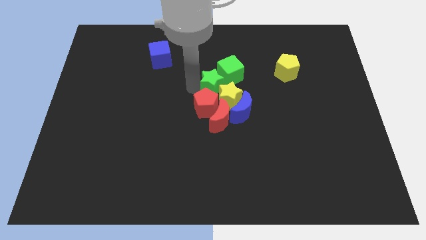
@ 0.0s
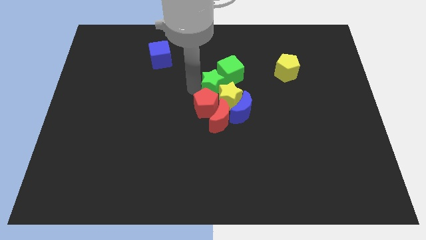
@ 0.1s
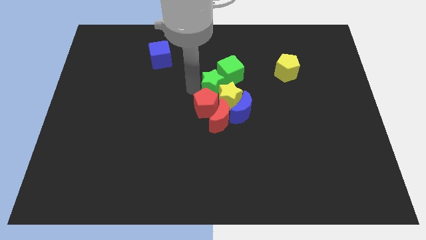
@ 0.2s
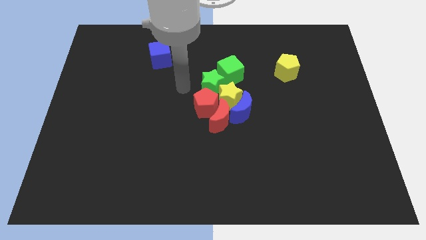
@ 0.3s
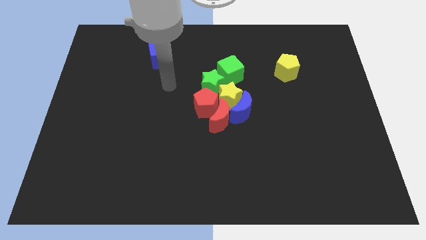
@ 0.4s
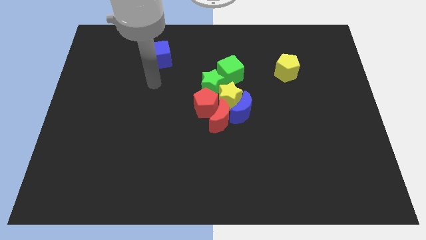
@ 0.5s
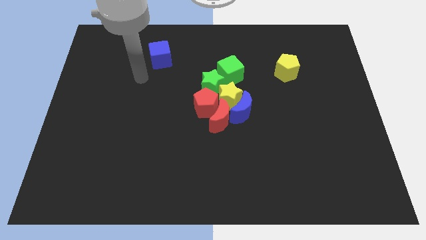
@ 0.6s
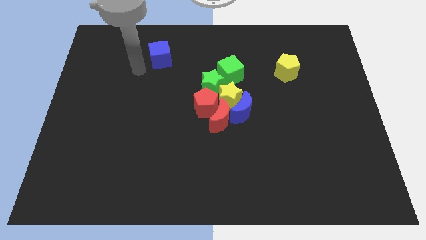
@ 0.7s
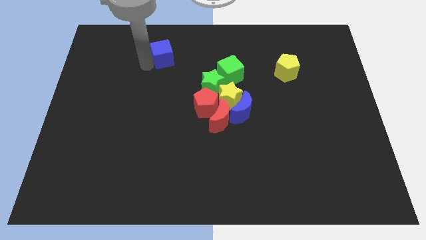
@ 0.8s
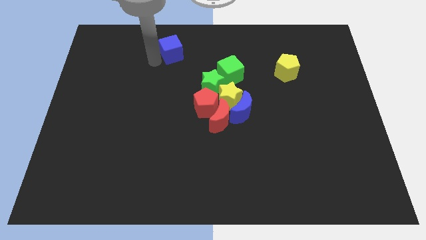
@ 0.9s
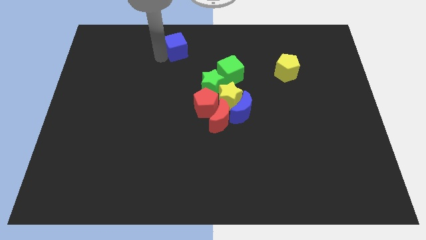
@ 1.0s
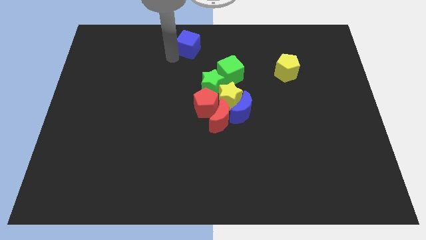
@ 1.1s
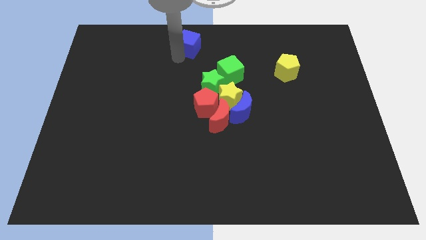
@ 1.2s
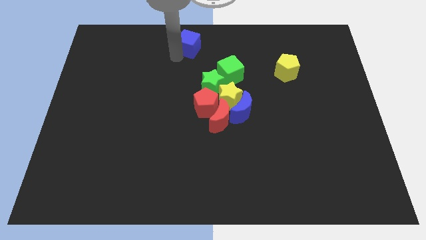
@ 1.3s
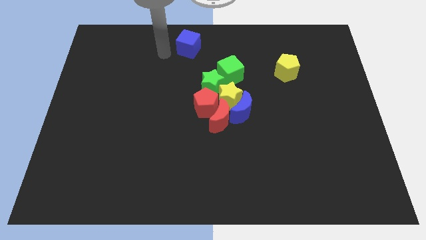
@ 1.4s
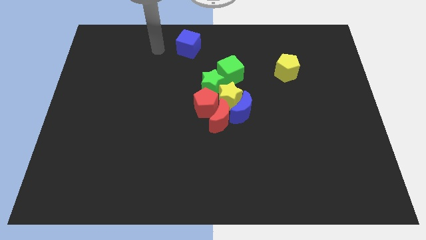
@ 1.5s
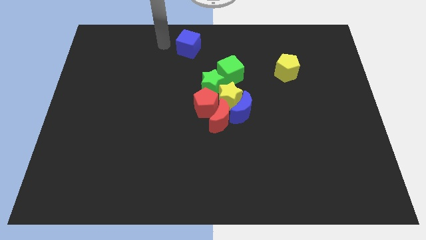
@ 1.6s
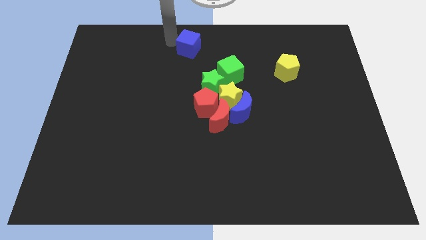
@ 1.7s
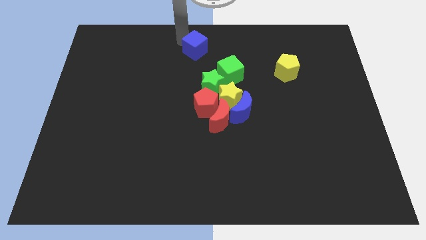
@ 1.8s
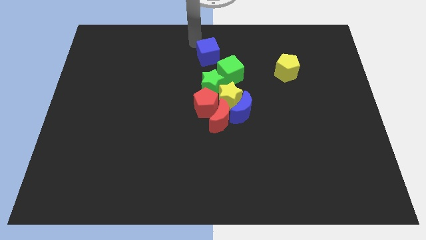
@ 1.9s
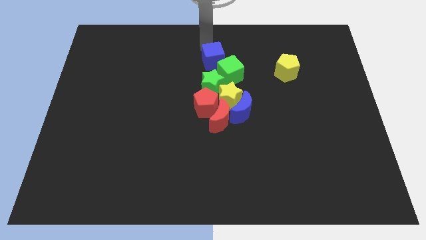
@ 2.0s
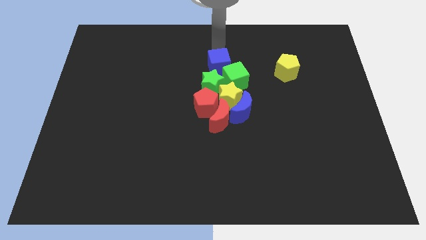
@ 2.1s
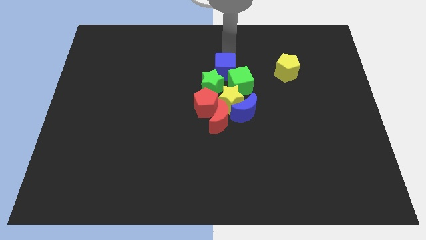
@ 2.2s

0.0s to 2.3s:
move blue cube into the group of blocks

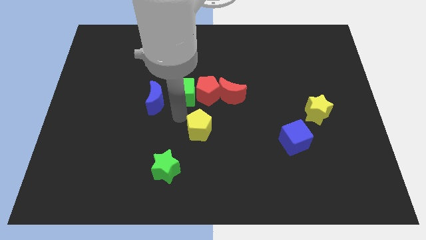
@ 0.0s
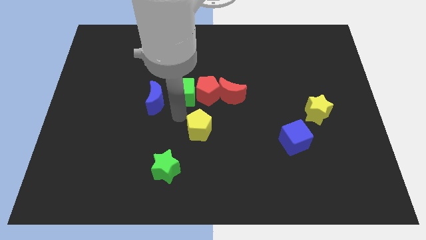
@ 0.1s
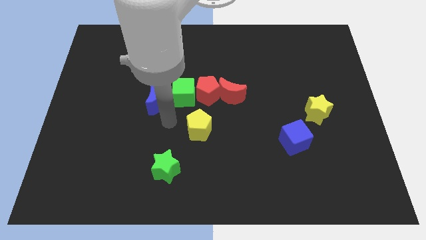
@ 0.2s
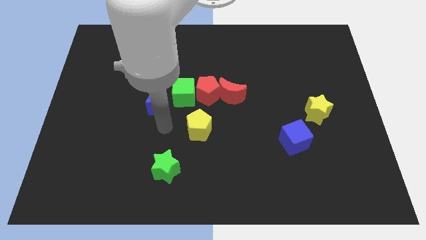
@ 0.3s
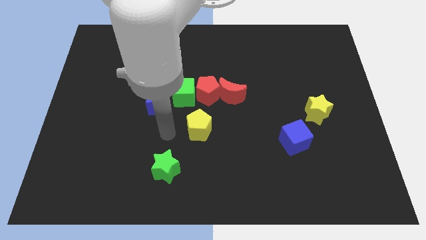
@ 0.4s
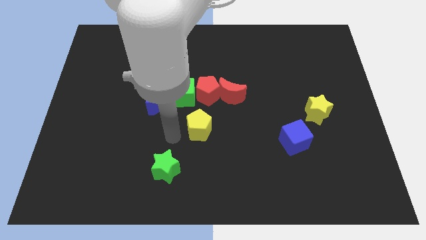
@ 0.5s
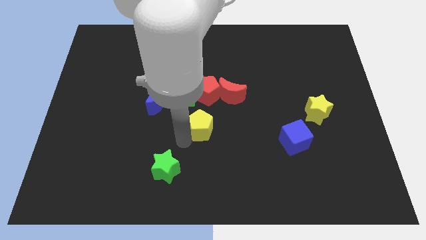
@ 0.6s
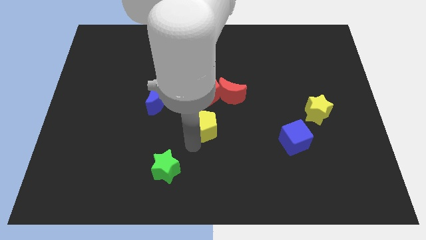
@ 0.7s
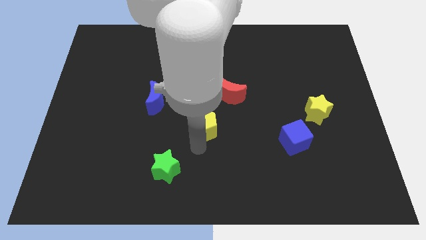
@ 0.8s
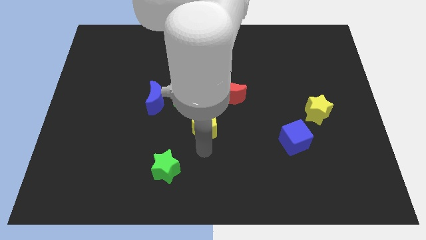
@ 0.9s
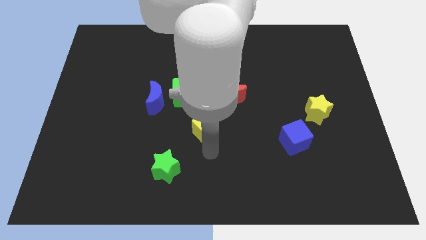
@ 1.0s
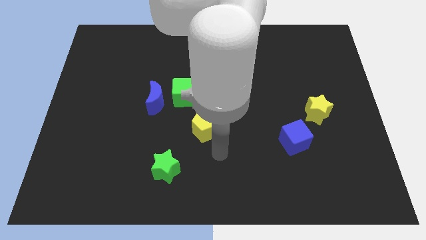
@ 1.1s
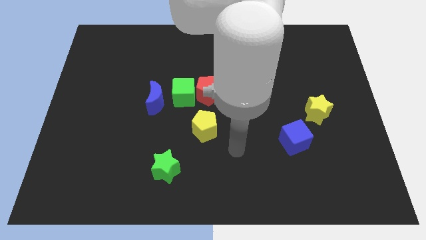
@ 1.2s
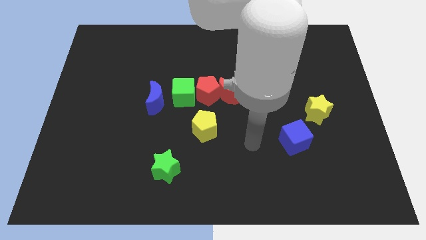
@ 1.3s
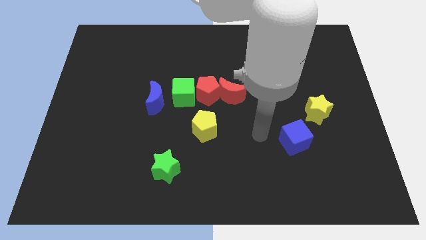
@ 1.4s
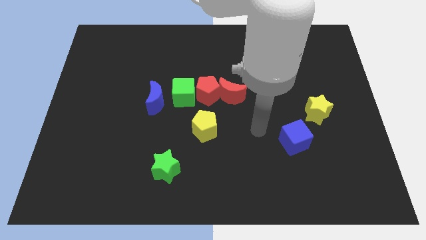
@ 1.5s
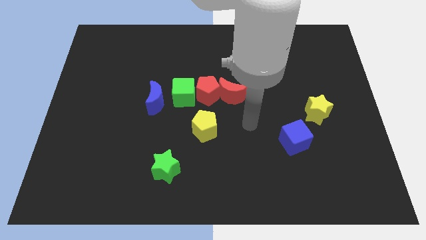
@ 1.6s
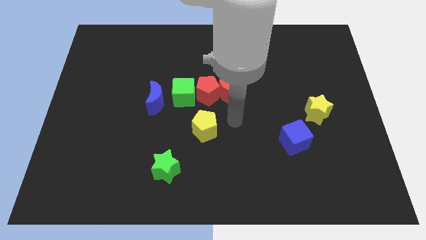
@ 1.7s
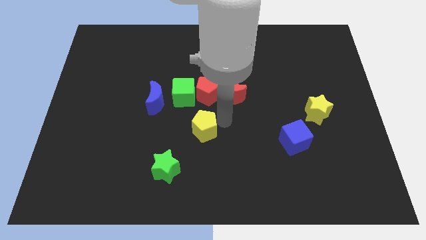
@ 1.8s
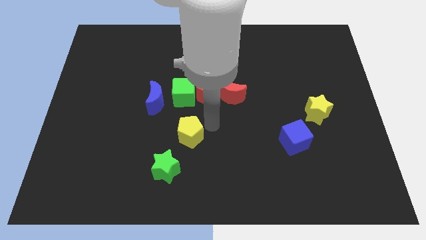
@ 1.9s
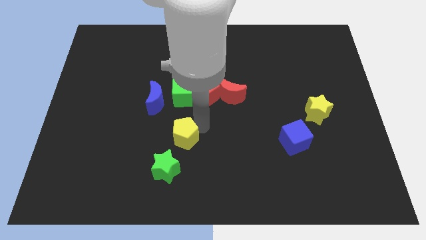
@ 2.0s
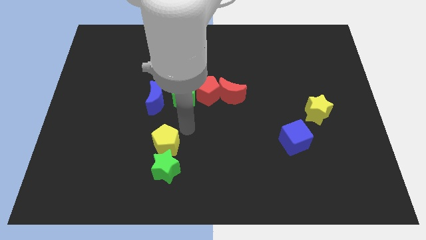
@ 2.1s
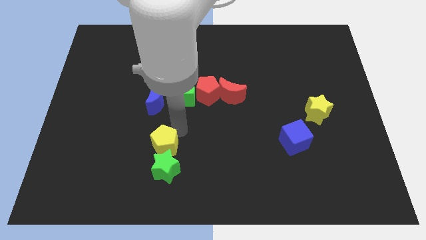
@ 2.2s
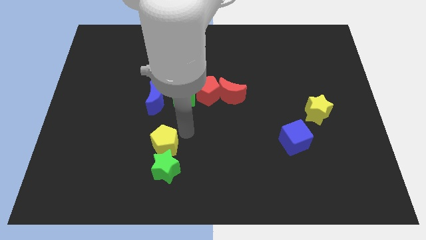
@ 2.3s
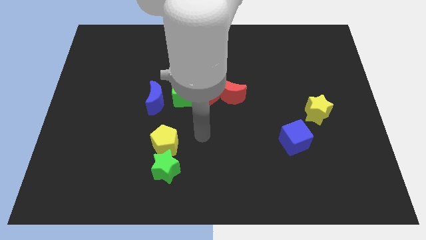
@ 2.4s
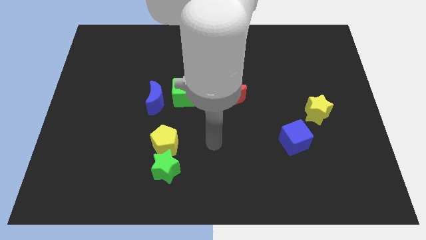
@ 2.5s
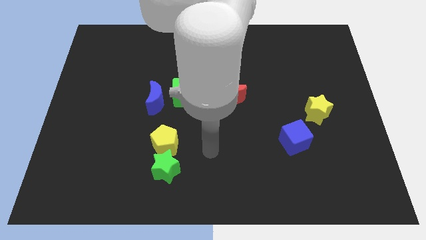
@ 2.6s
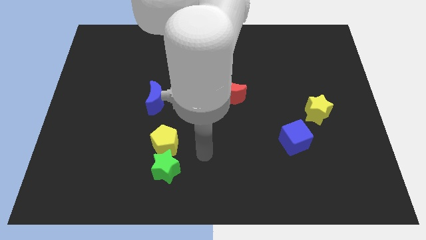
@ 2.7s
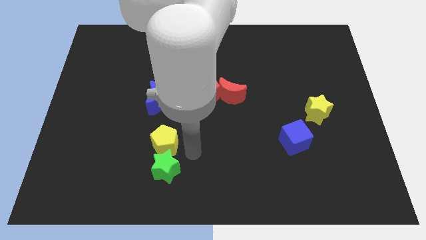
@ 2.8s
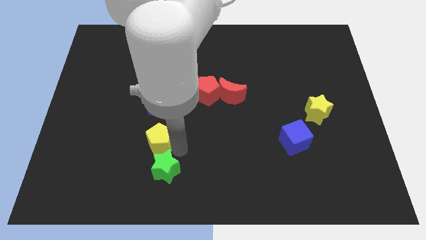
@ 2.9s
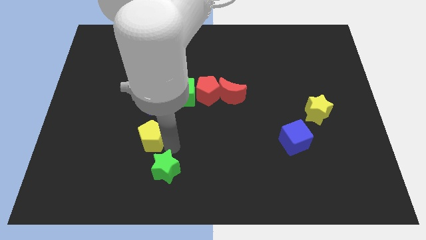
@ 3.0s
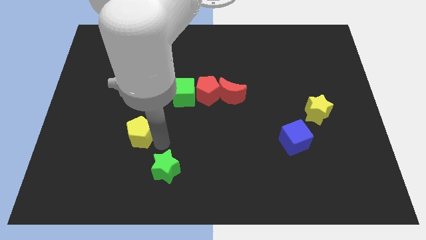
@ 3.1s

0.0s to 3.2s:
move yellow pentagon to the top of green star

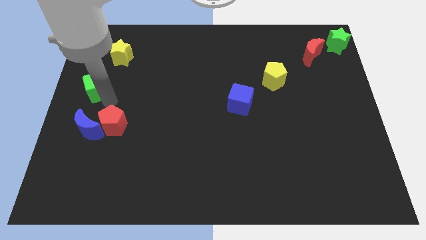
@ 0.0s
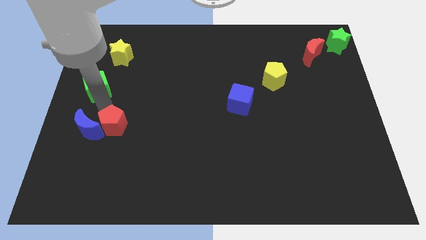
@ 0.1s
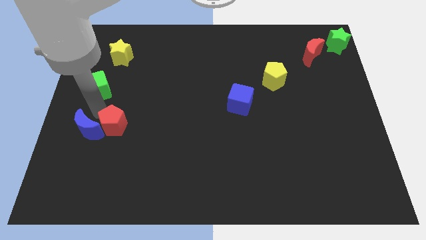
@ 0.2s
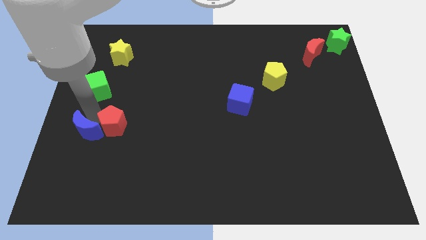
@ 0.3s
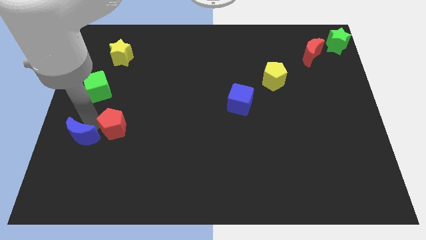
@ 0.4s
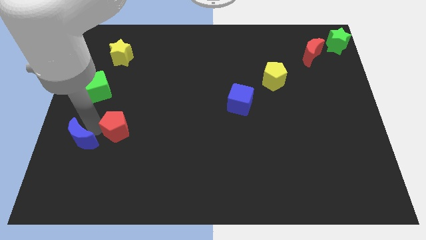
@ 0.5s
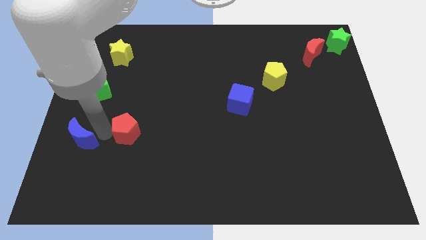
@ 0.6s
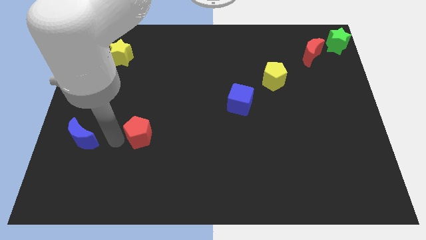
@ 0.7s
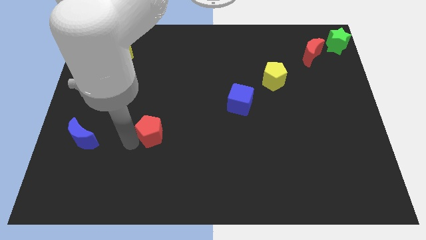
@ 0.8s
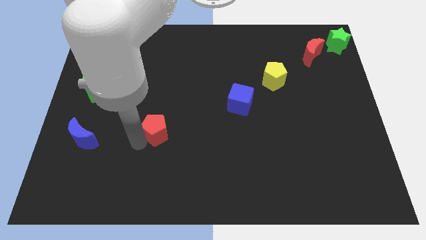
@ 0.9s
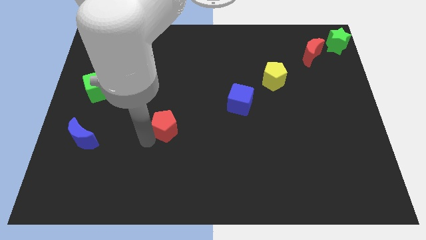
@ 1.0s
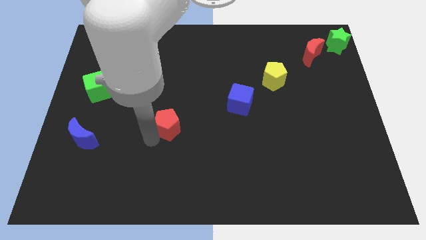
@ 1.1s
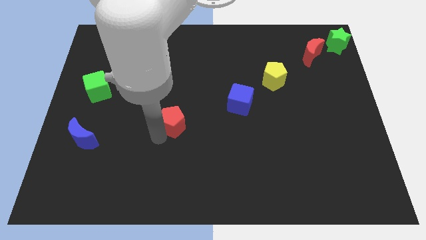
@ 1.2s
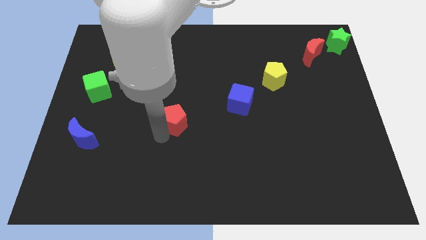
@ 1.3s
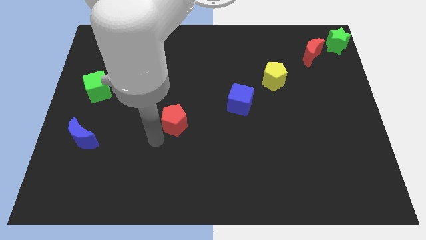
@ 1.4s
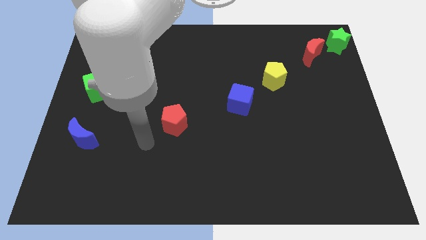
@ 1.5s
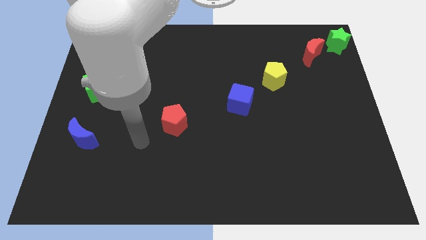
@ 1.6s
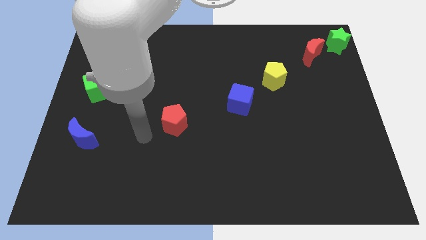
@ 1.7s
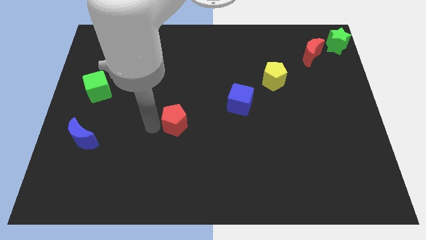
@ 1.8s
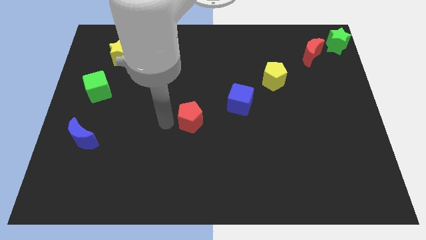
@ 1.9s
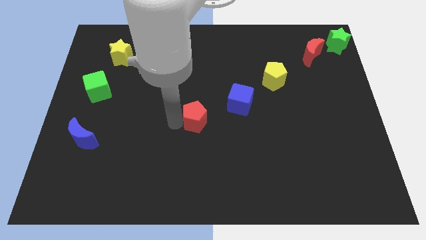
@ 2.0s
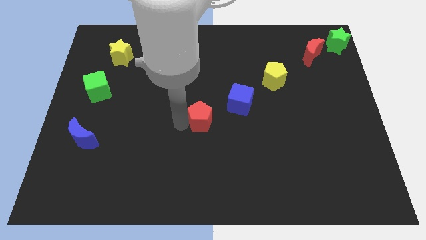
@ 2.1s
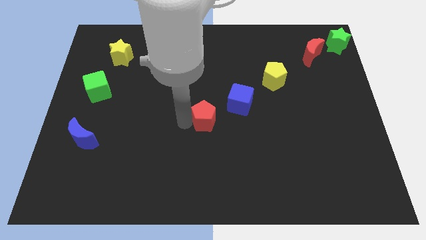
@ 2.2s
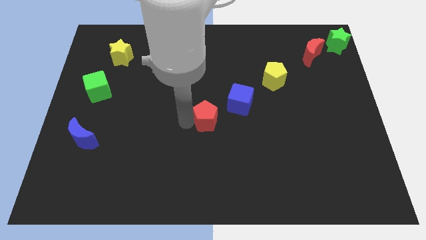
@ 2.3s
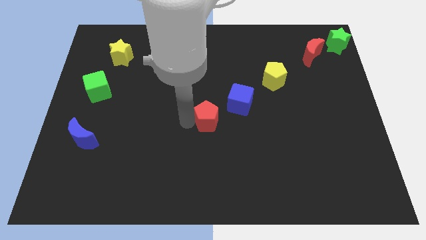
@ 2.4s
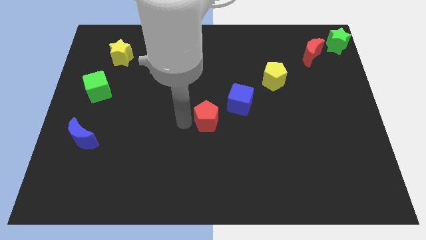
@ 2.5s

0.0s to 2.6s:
place the red pentagon diagonal to the blue cube

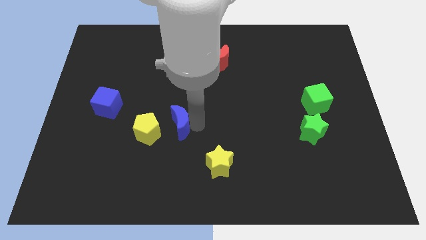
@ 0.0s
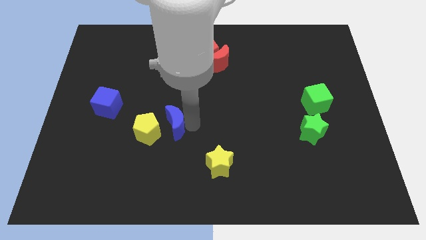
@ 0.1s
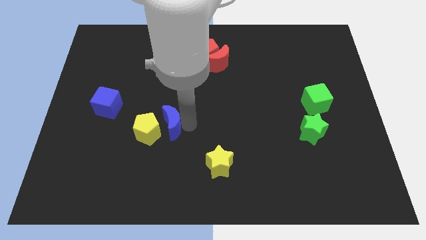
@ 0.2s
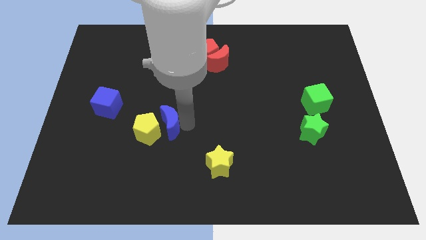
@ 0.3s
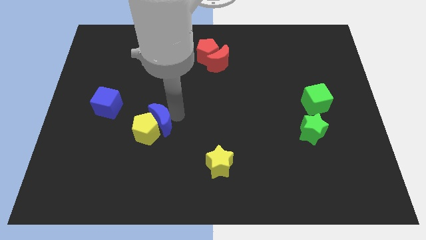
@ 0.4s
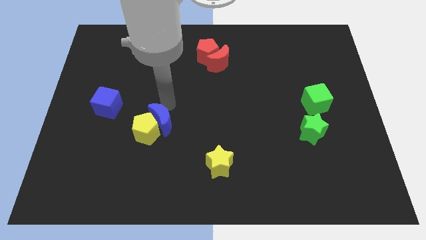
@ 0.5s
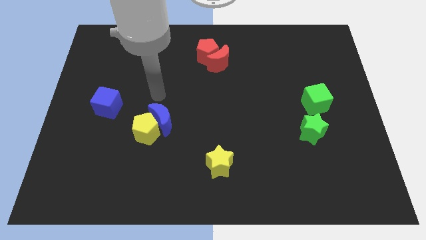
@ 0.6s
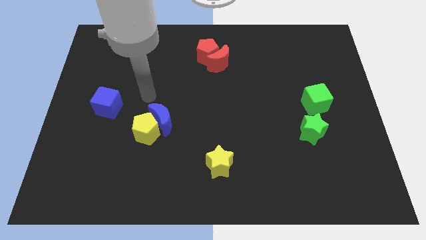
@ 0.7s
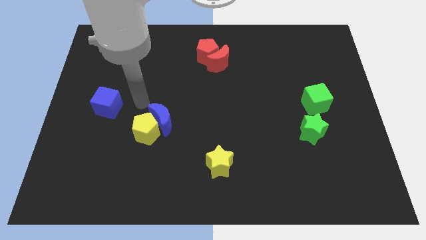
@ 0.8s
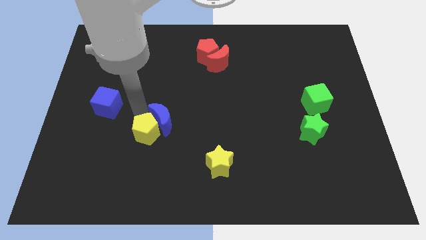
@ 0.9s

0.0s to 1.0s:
push the blue crescent into the yellow pentagon
